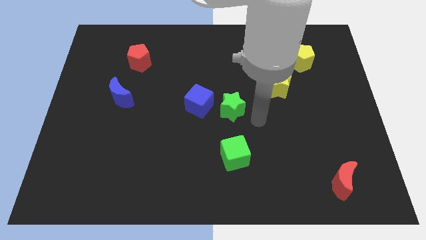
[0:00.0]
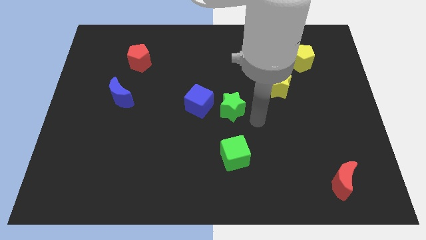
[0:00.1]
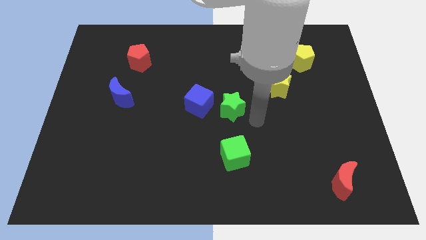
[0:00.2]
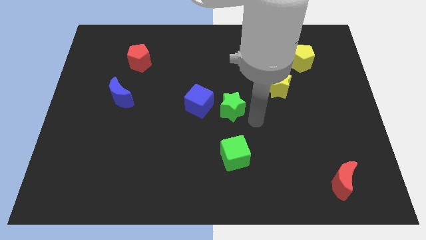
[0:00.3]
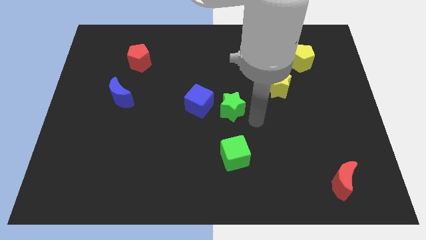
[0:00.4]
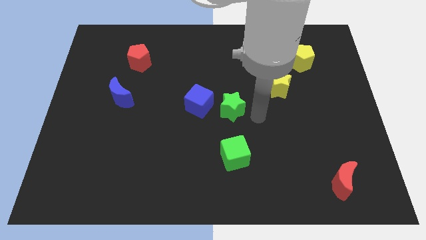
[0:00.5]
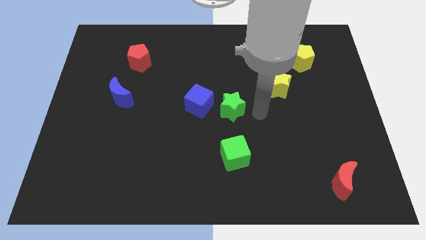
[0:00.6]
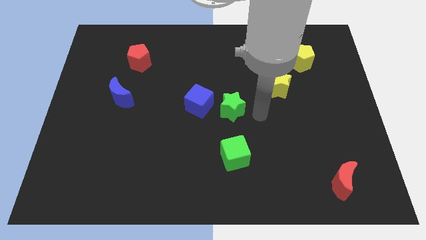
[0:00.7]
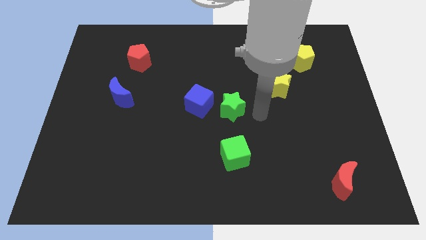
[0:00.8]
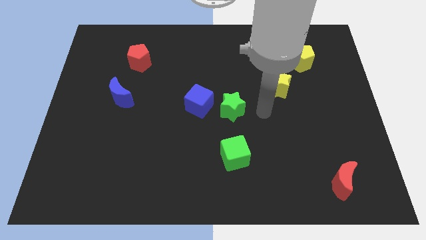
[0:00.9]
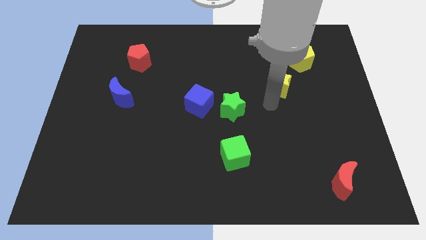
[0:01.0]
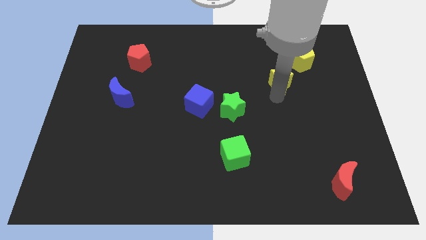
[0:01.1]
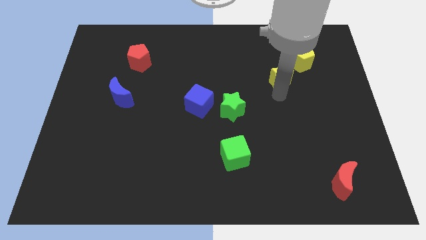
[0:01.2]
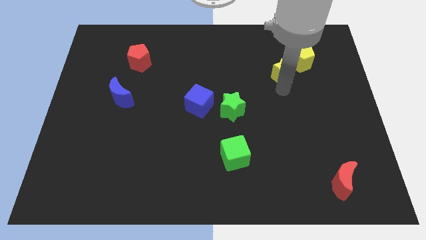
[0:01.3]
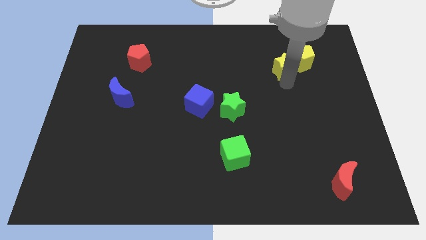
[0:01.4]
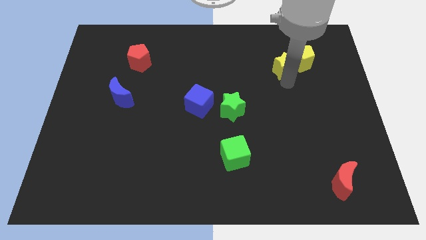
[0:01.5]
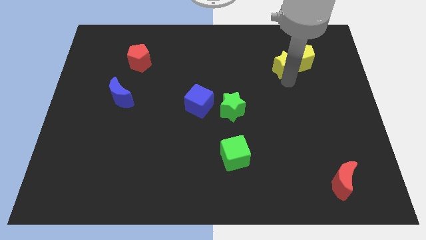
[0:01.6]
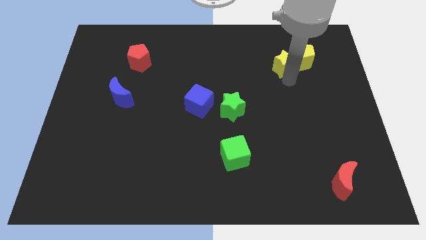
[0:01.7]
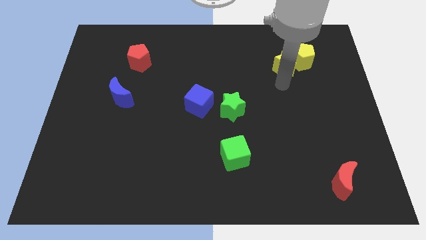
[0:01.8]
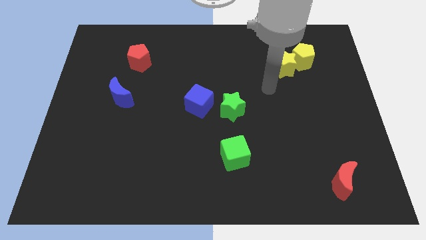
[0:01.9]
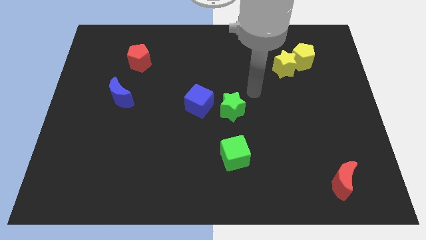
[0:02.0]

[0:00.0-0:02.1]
move yellow star into yellow pentagon

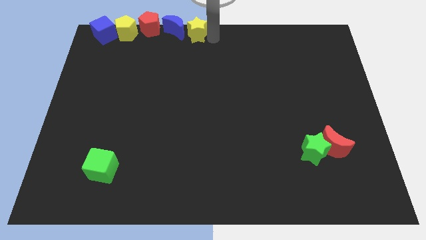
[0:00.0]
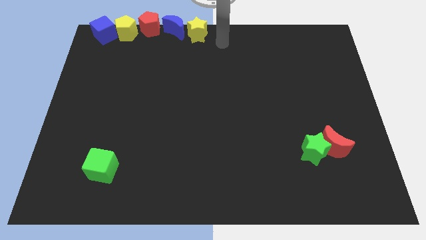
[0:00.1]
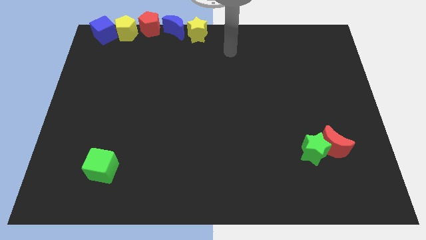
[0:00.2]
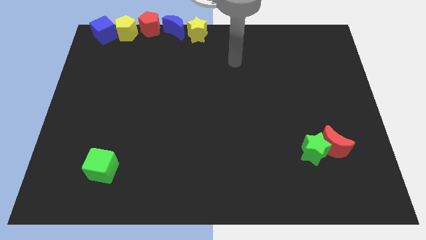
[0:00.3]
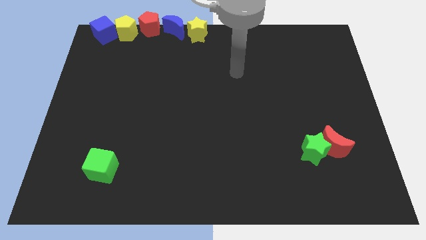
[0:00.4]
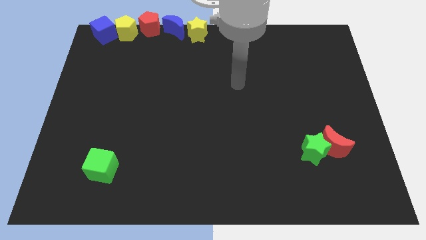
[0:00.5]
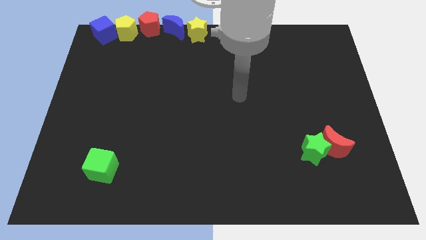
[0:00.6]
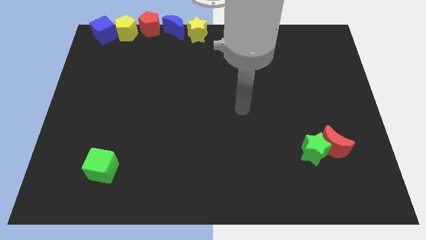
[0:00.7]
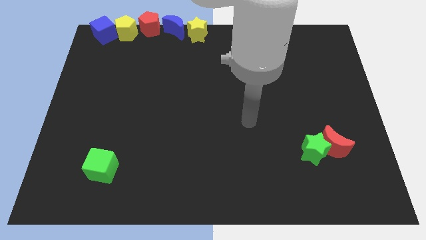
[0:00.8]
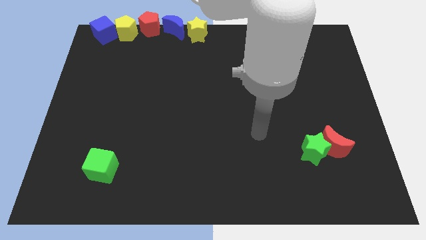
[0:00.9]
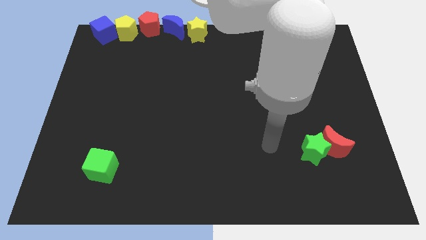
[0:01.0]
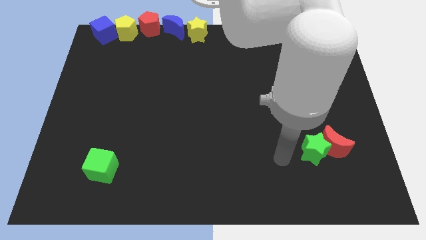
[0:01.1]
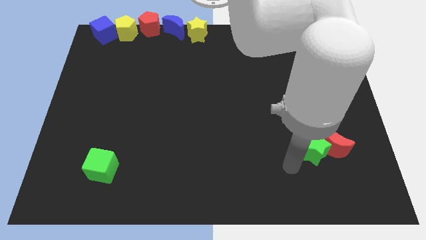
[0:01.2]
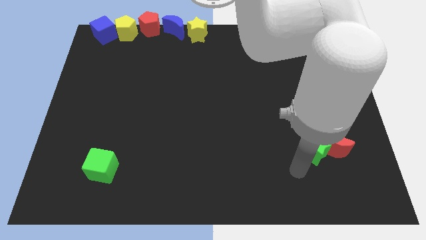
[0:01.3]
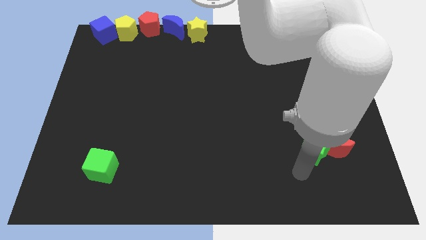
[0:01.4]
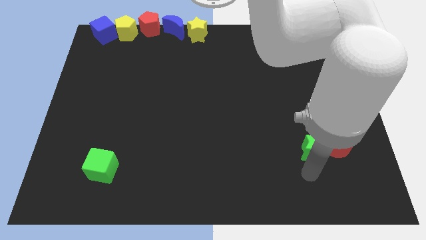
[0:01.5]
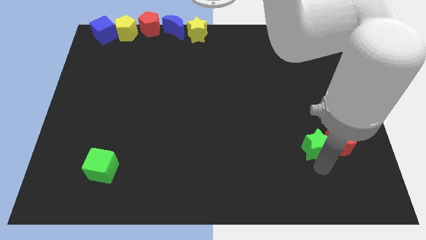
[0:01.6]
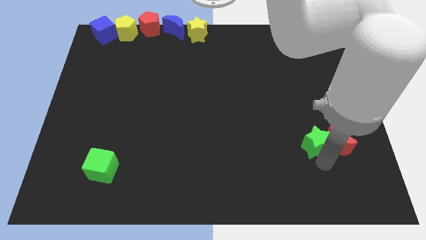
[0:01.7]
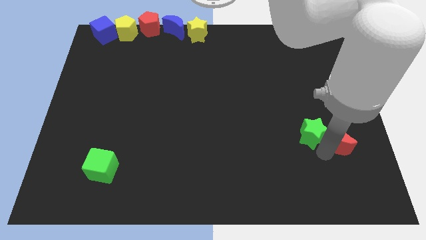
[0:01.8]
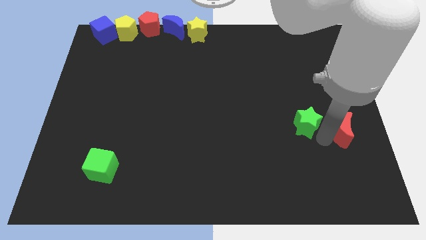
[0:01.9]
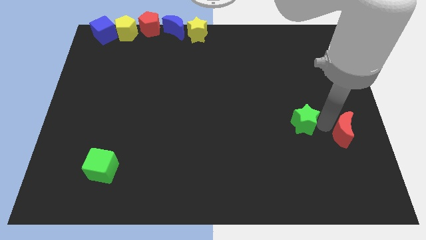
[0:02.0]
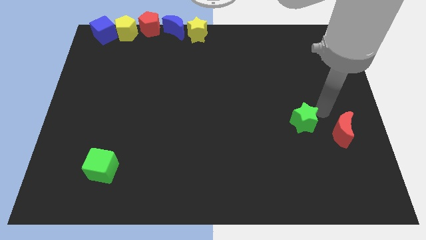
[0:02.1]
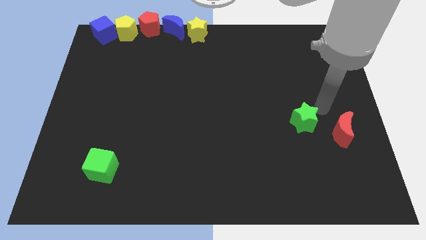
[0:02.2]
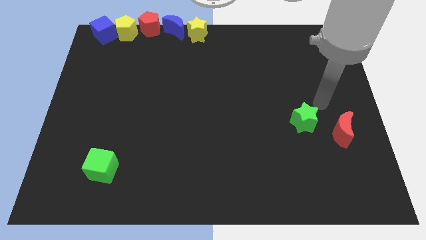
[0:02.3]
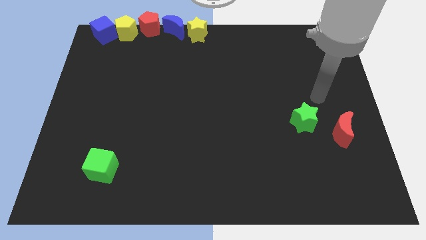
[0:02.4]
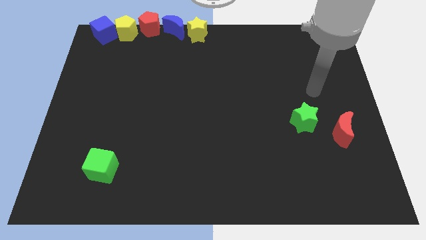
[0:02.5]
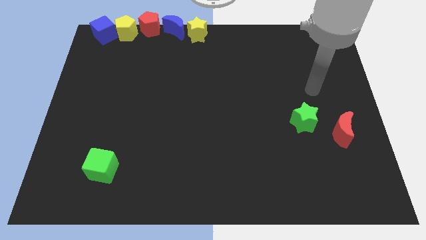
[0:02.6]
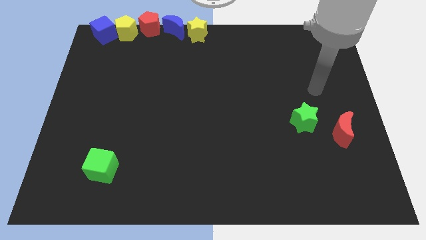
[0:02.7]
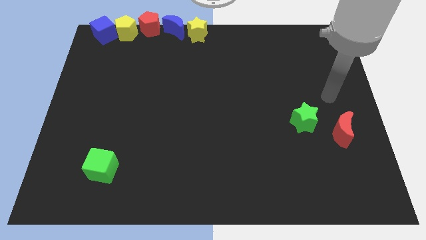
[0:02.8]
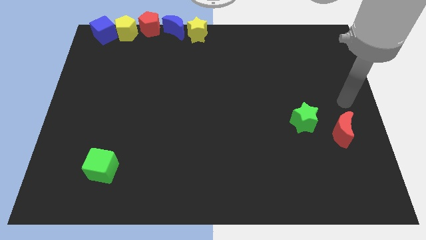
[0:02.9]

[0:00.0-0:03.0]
push the green star slightly to the top

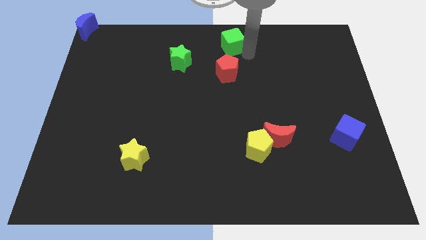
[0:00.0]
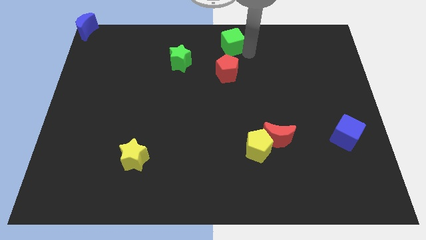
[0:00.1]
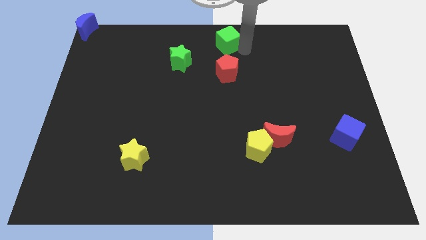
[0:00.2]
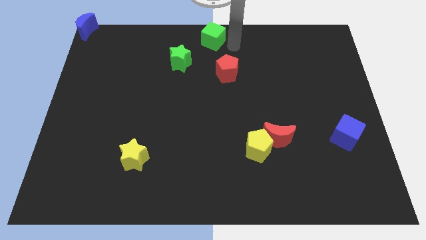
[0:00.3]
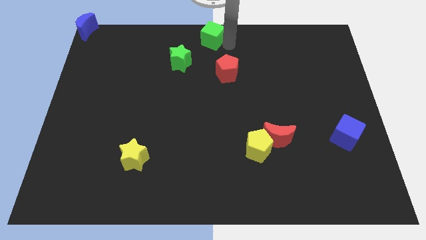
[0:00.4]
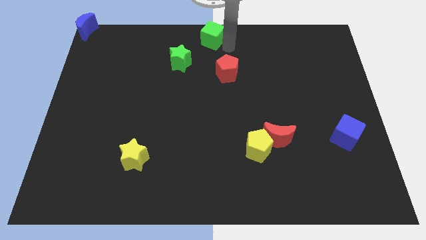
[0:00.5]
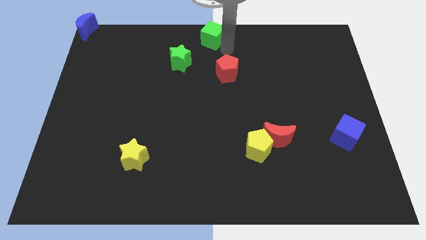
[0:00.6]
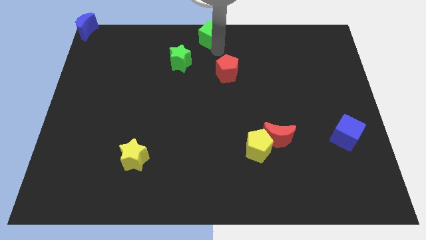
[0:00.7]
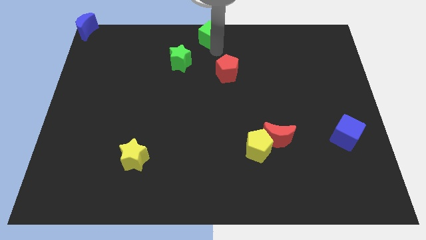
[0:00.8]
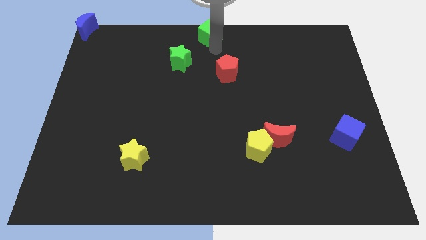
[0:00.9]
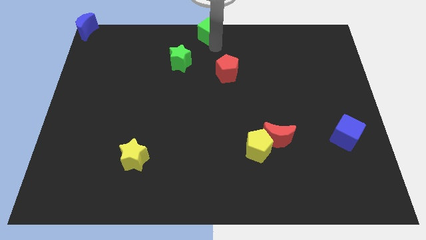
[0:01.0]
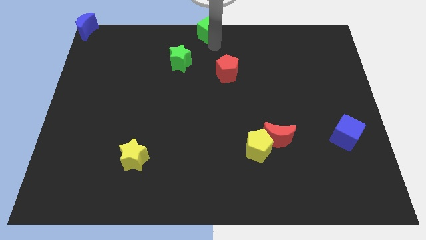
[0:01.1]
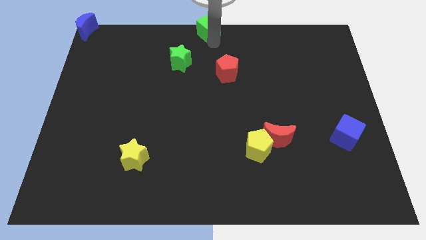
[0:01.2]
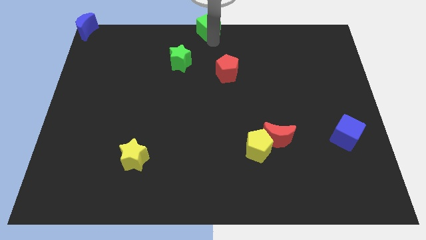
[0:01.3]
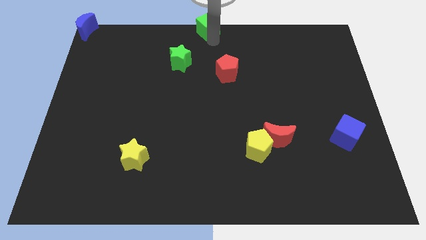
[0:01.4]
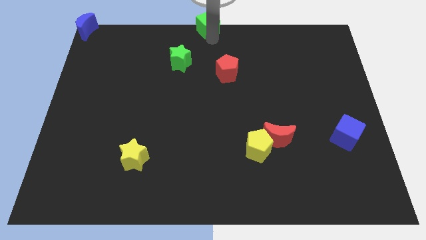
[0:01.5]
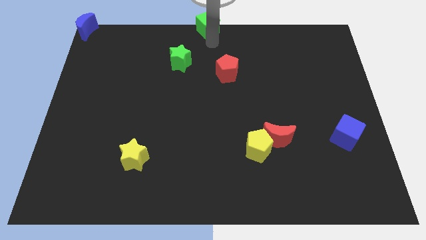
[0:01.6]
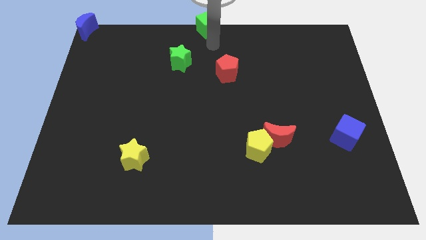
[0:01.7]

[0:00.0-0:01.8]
push the green cube to the top center

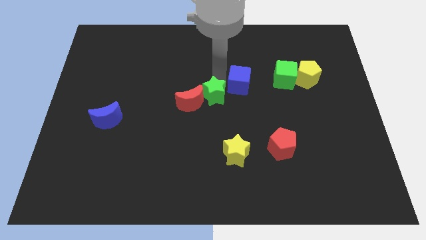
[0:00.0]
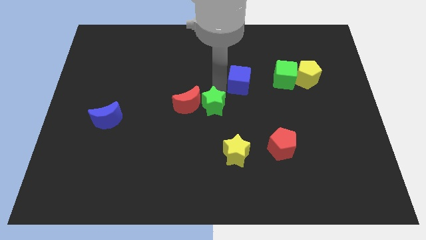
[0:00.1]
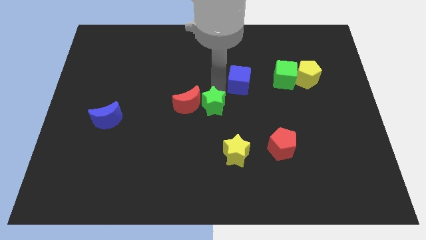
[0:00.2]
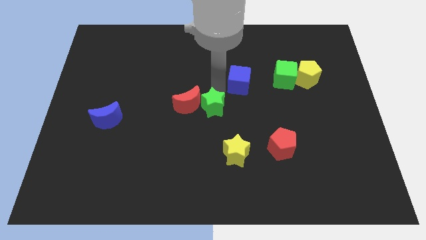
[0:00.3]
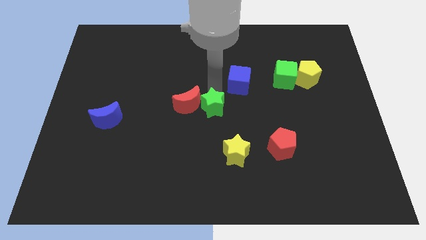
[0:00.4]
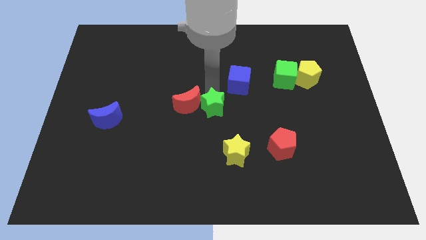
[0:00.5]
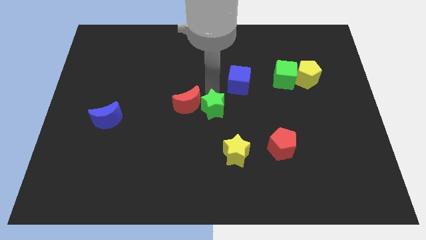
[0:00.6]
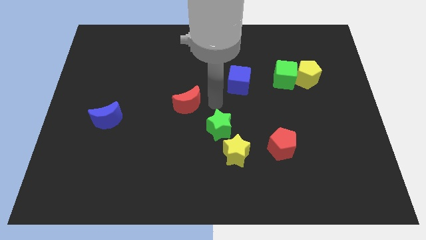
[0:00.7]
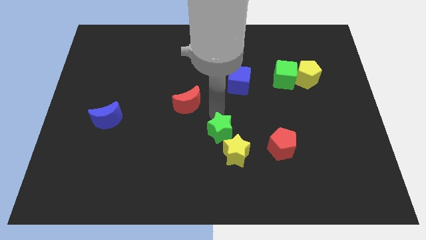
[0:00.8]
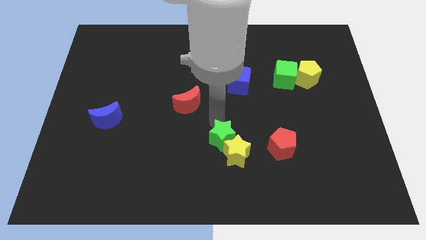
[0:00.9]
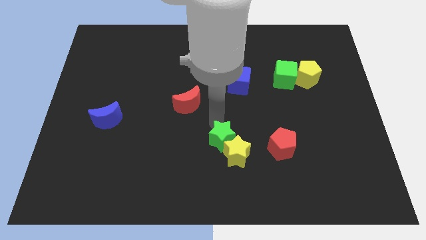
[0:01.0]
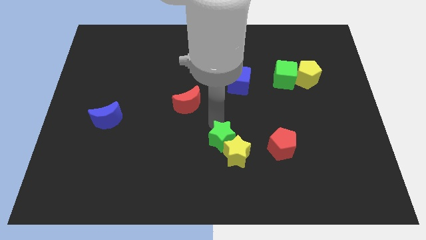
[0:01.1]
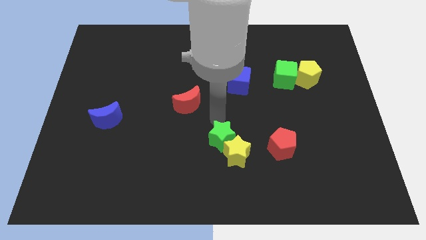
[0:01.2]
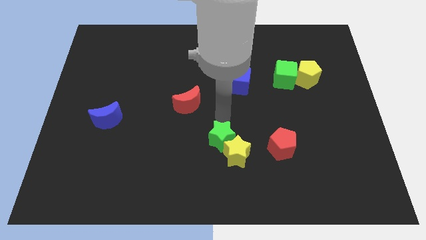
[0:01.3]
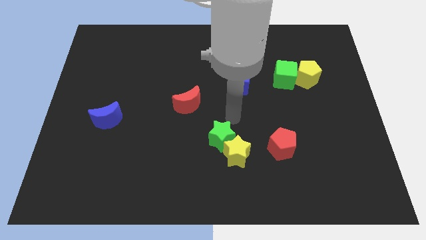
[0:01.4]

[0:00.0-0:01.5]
push green star in to yellow star

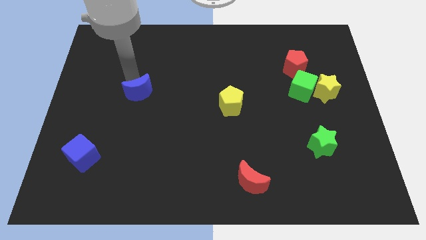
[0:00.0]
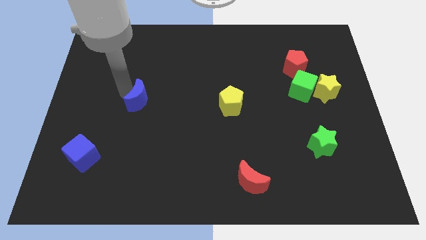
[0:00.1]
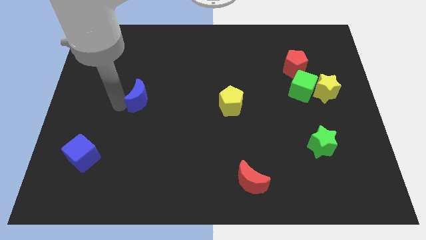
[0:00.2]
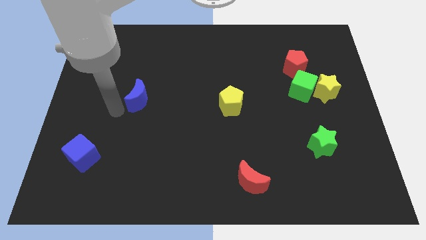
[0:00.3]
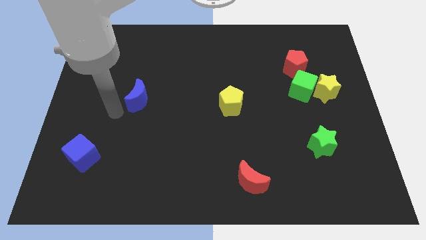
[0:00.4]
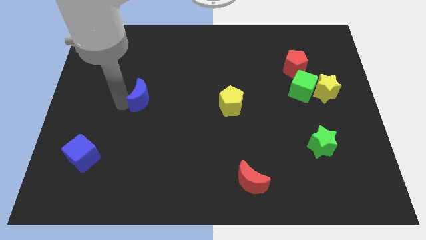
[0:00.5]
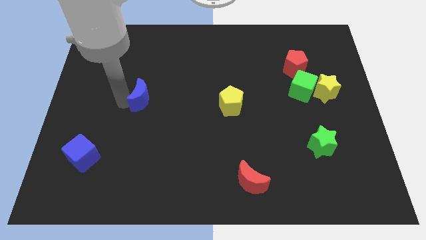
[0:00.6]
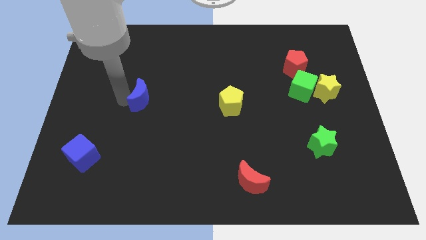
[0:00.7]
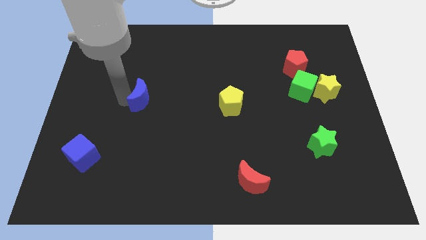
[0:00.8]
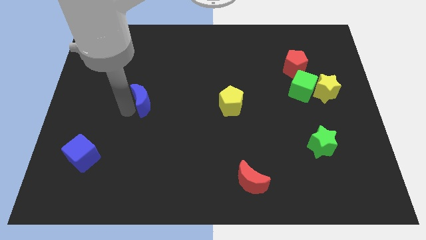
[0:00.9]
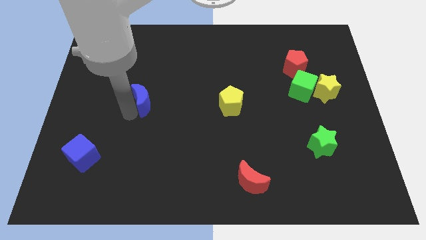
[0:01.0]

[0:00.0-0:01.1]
touch the bottom left side of blue moon
